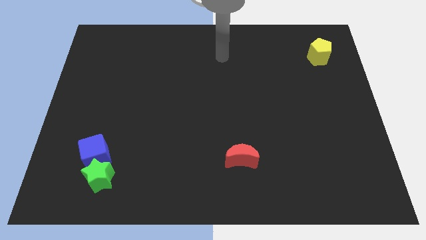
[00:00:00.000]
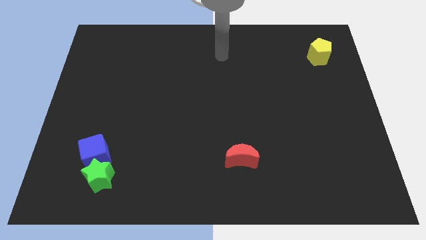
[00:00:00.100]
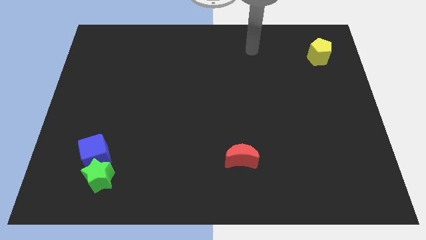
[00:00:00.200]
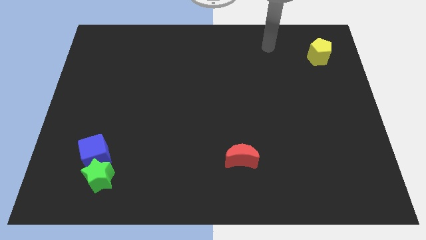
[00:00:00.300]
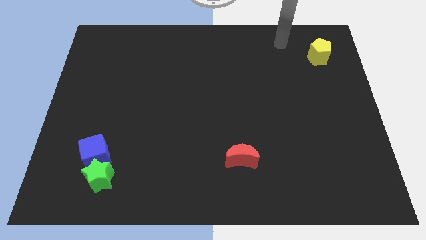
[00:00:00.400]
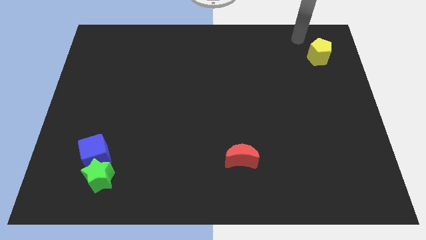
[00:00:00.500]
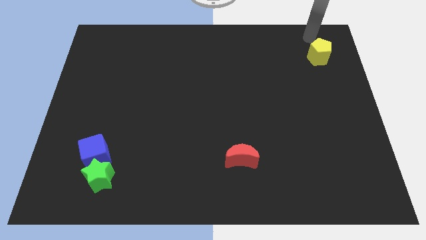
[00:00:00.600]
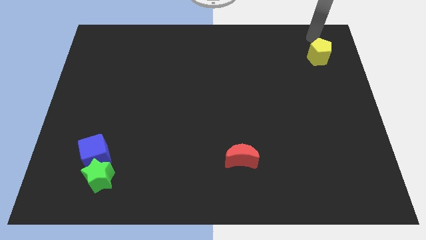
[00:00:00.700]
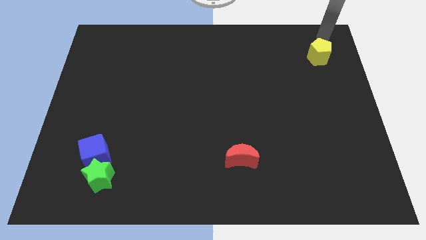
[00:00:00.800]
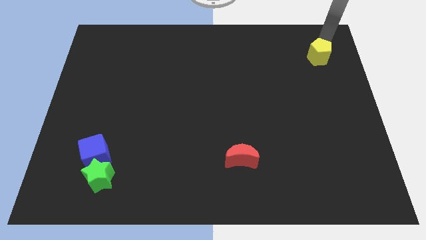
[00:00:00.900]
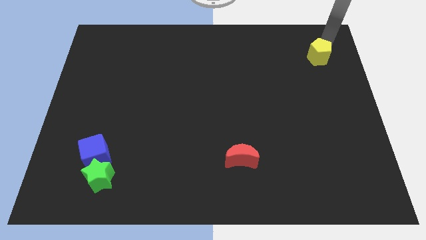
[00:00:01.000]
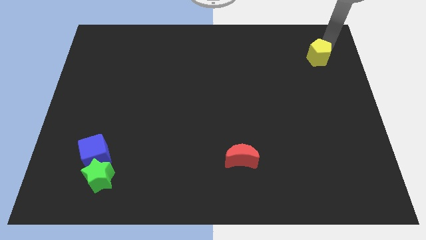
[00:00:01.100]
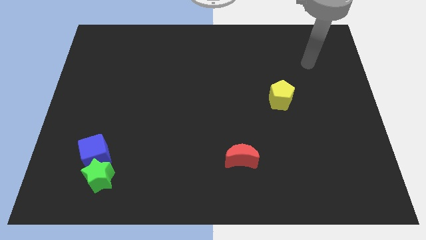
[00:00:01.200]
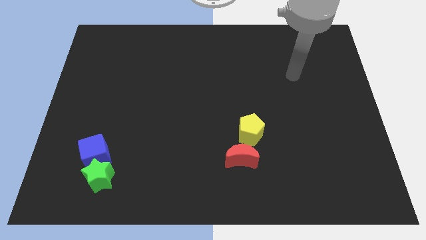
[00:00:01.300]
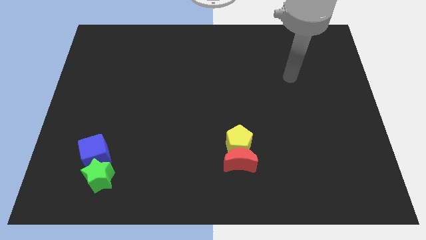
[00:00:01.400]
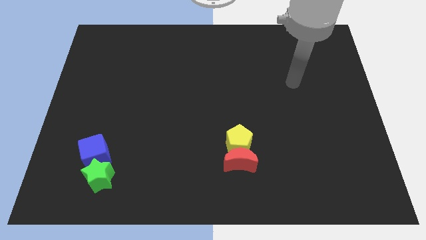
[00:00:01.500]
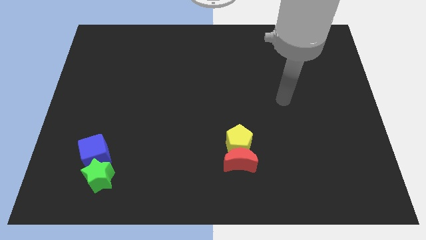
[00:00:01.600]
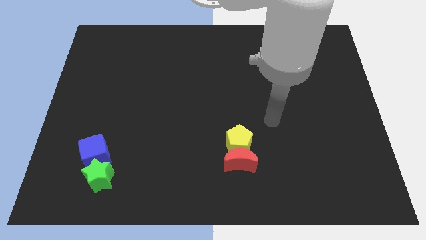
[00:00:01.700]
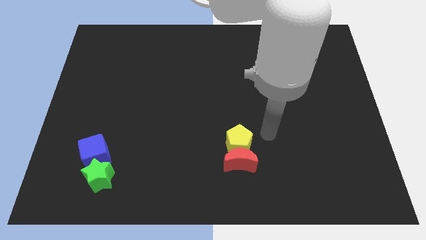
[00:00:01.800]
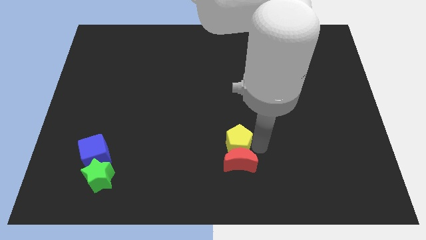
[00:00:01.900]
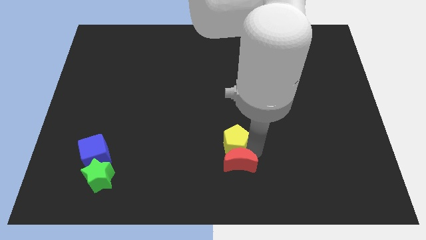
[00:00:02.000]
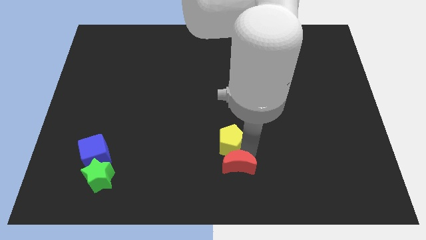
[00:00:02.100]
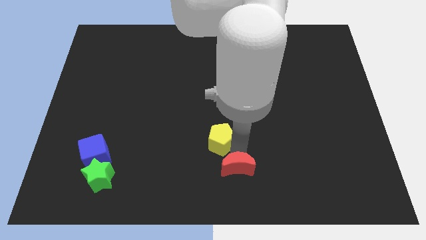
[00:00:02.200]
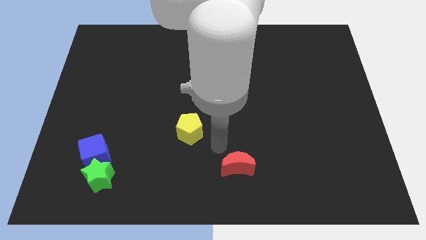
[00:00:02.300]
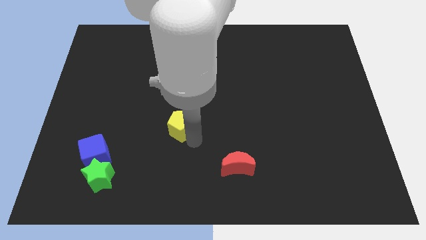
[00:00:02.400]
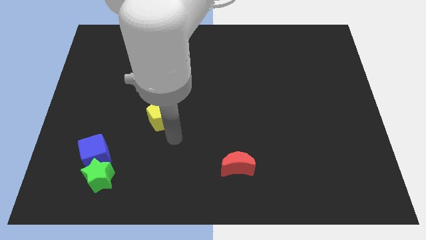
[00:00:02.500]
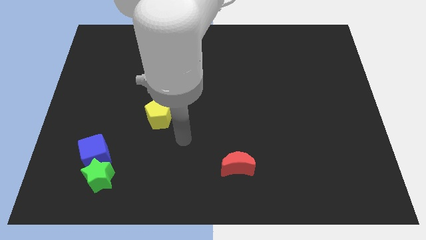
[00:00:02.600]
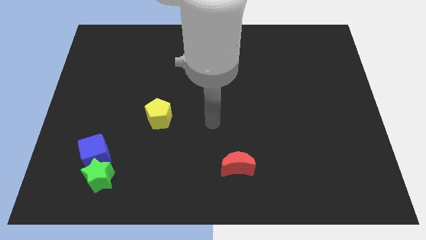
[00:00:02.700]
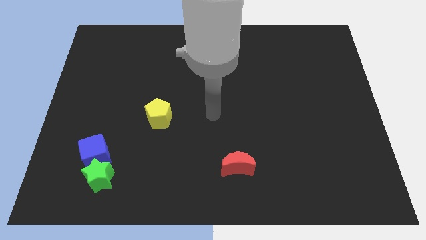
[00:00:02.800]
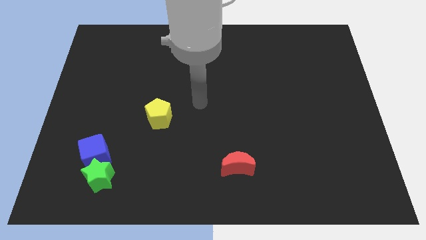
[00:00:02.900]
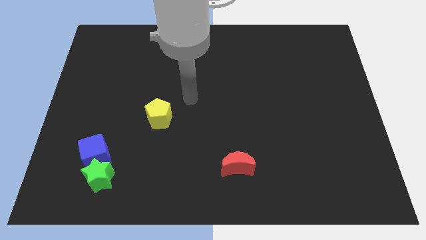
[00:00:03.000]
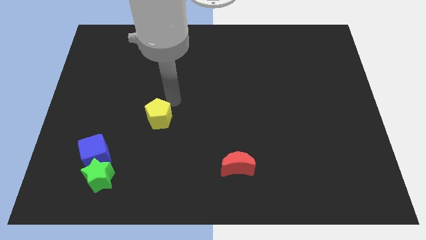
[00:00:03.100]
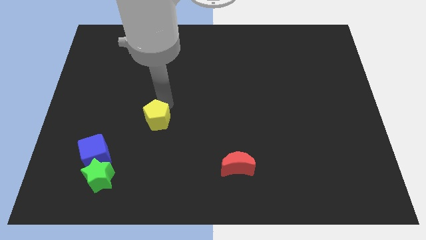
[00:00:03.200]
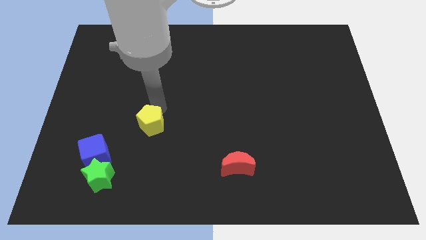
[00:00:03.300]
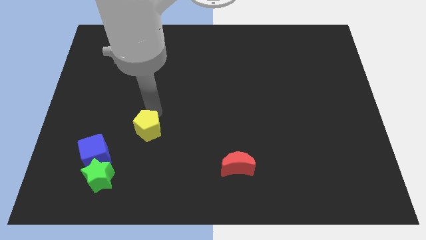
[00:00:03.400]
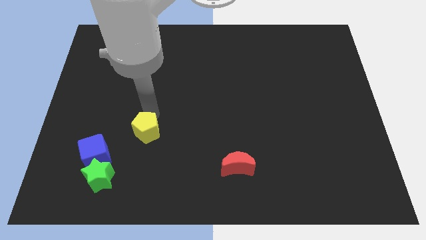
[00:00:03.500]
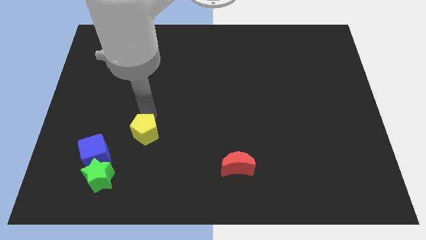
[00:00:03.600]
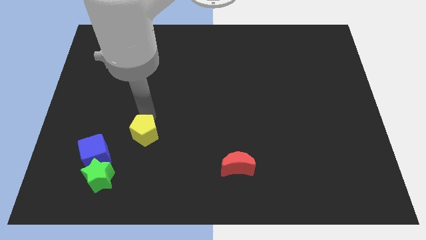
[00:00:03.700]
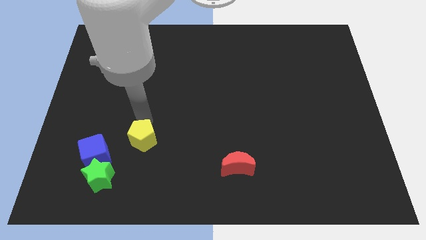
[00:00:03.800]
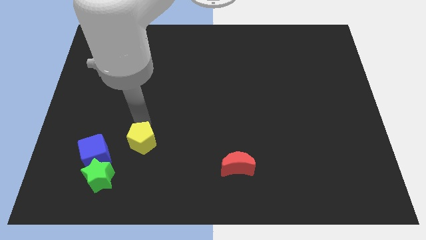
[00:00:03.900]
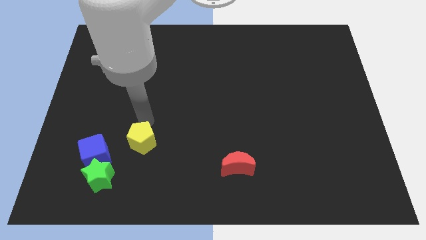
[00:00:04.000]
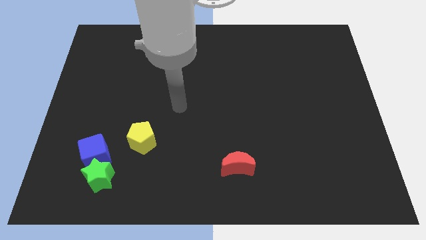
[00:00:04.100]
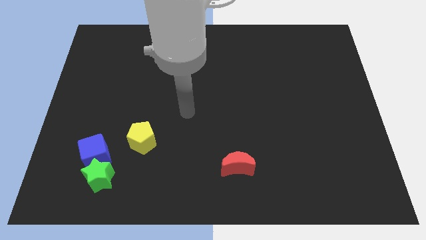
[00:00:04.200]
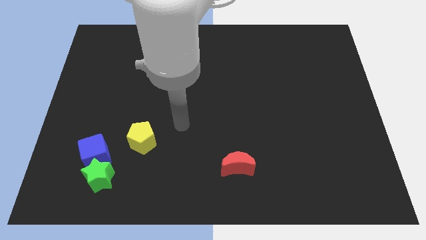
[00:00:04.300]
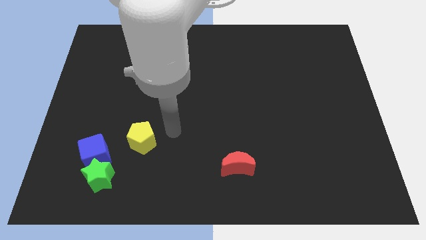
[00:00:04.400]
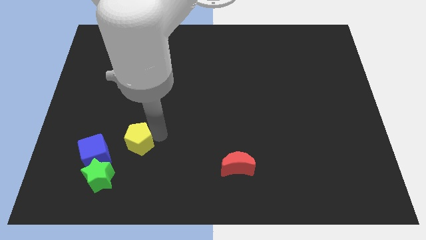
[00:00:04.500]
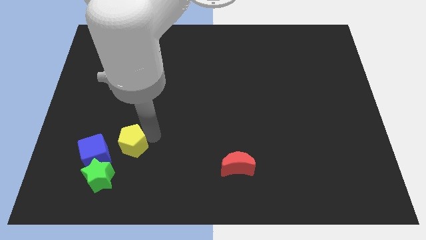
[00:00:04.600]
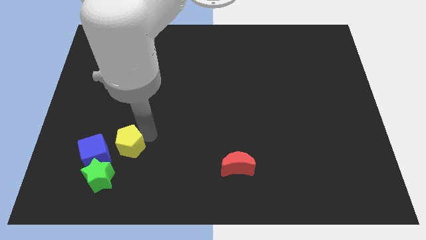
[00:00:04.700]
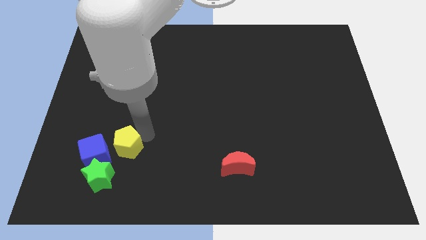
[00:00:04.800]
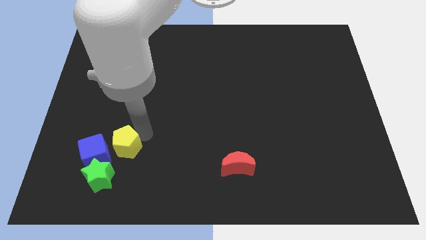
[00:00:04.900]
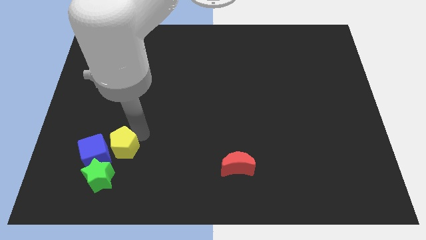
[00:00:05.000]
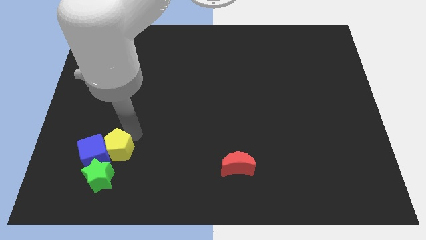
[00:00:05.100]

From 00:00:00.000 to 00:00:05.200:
push the pentagon next to the cube

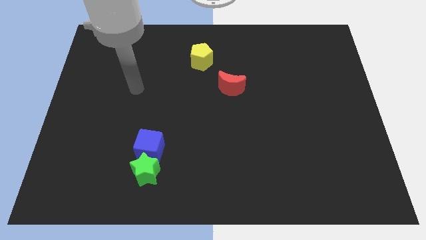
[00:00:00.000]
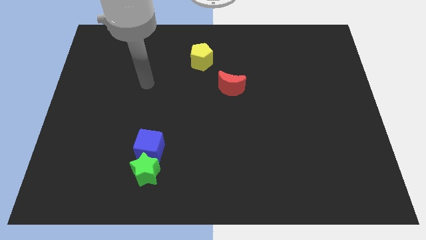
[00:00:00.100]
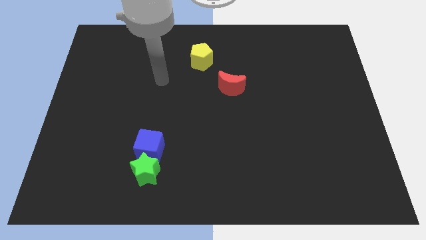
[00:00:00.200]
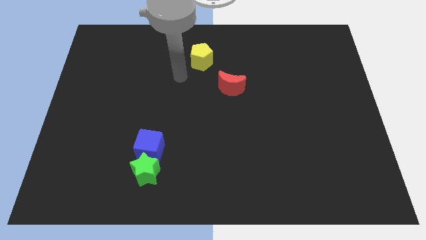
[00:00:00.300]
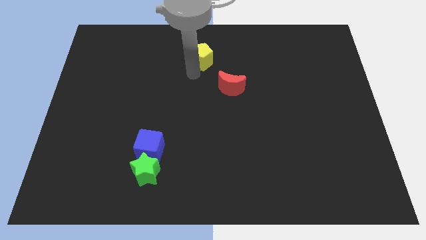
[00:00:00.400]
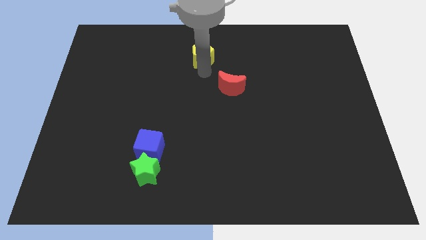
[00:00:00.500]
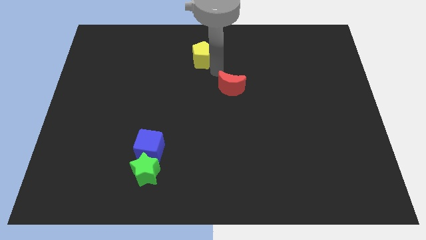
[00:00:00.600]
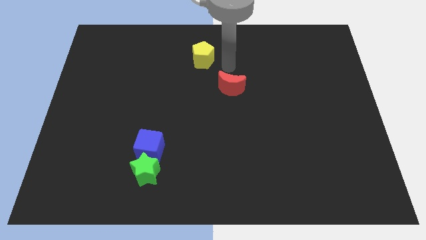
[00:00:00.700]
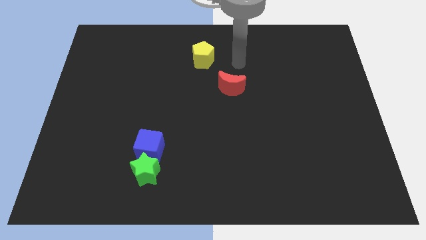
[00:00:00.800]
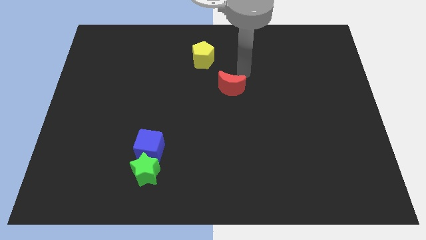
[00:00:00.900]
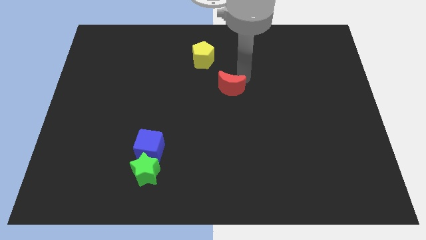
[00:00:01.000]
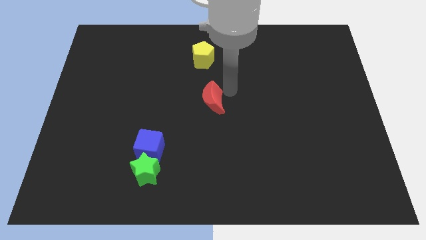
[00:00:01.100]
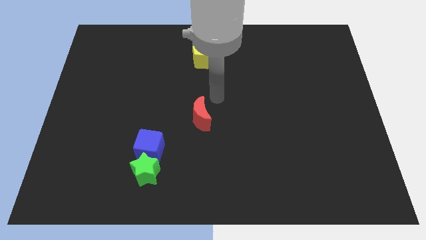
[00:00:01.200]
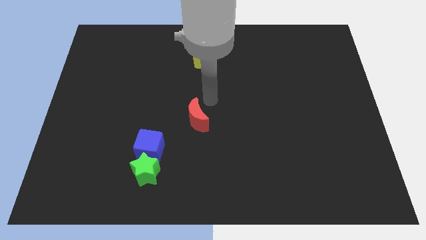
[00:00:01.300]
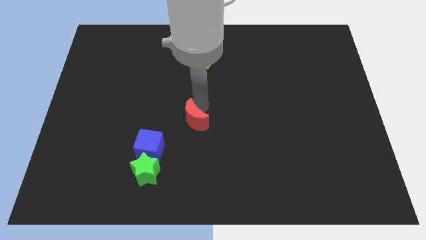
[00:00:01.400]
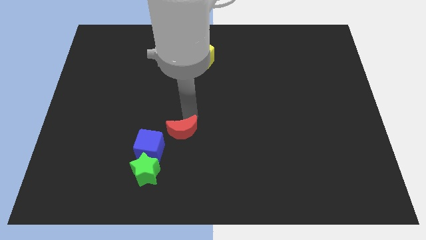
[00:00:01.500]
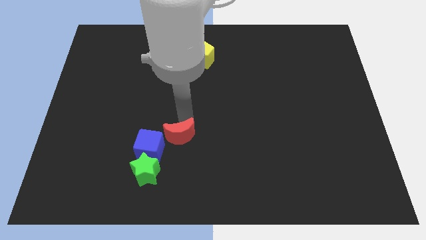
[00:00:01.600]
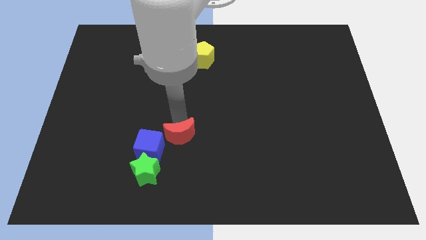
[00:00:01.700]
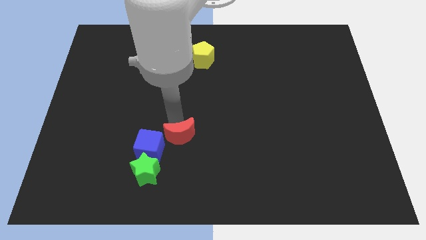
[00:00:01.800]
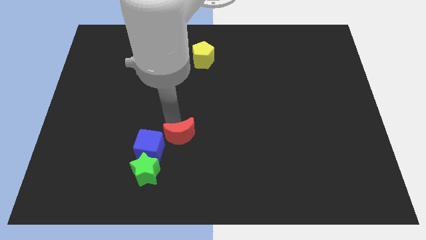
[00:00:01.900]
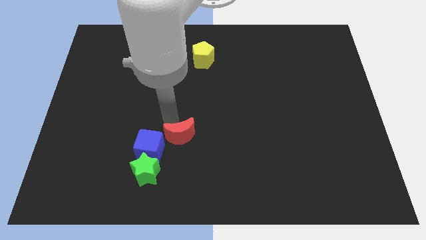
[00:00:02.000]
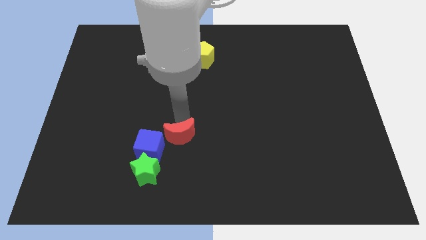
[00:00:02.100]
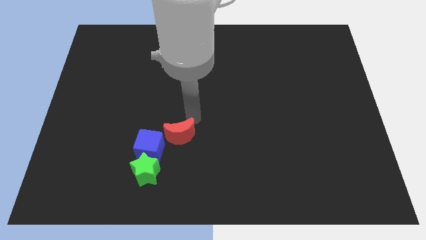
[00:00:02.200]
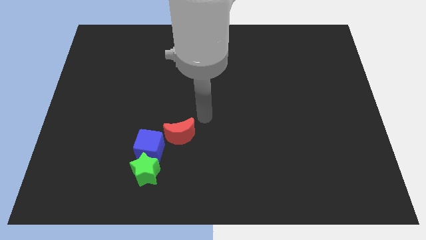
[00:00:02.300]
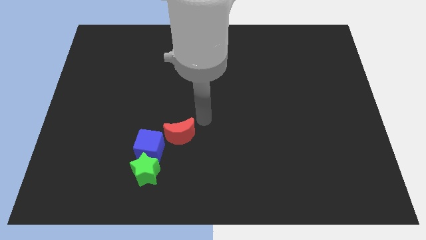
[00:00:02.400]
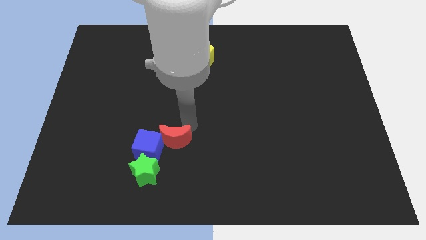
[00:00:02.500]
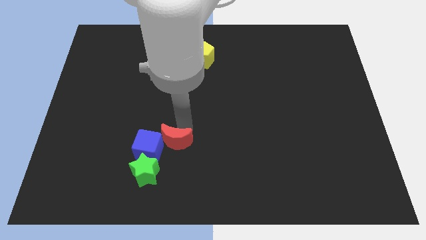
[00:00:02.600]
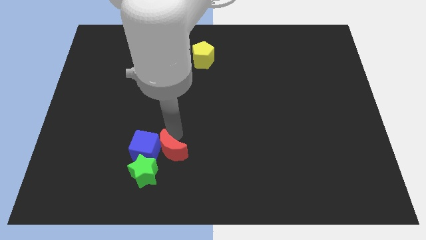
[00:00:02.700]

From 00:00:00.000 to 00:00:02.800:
push the red block next to the blue cube

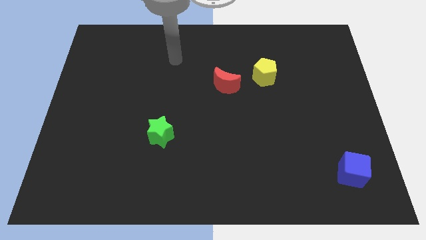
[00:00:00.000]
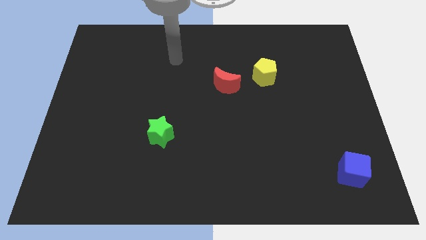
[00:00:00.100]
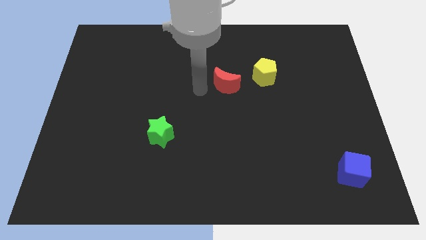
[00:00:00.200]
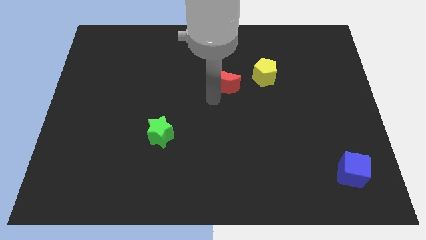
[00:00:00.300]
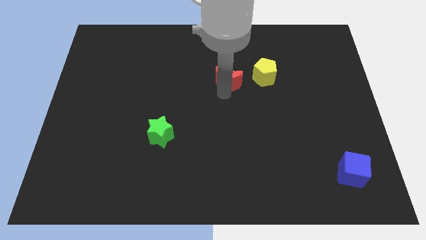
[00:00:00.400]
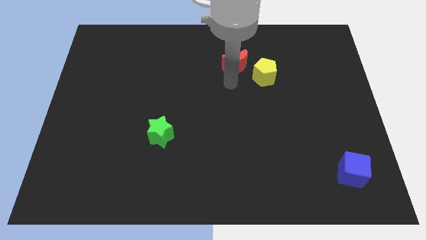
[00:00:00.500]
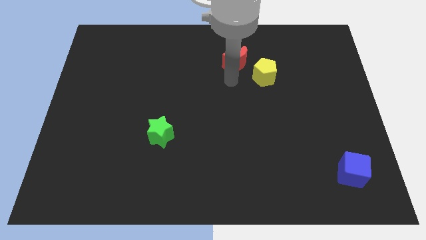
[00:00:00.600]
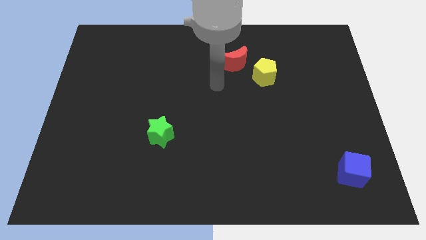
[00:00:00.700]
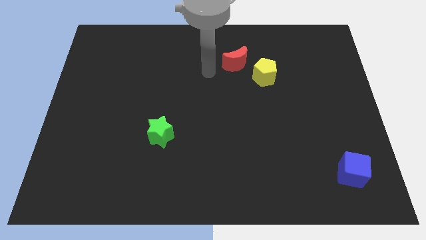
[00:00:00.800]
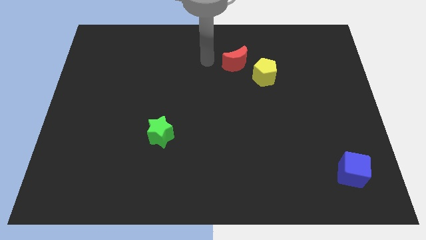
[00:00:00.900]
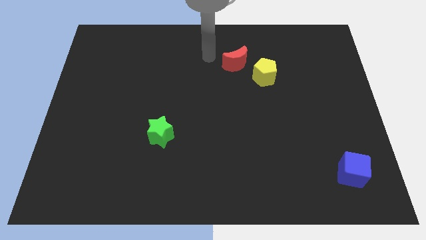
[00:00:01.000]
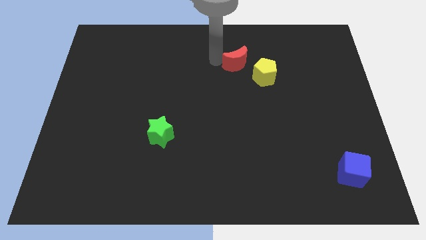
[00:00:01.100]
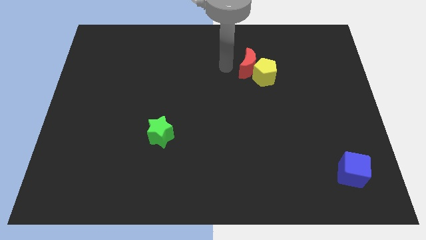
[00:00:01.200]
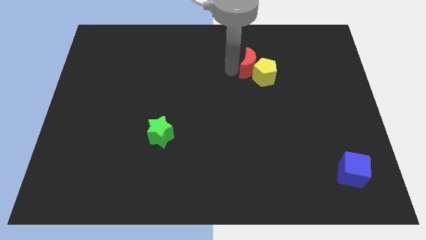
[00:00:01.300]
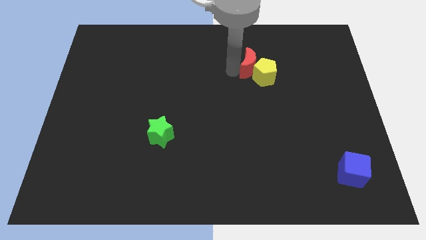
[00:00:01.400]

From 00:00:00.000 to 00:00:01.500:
slide the red moon close to the pentagon
